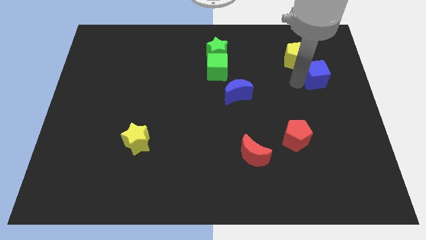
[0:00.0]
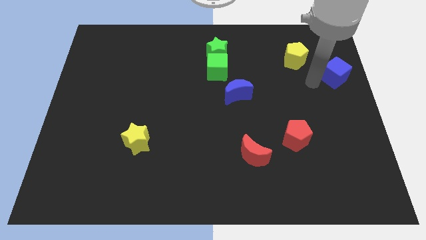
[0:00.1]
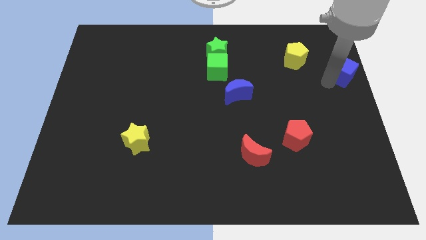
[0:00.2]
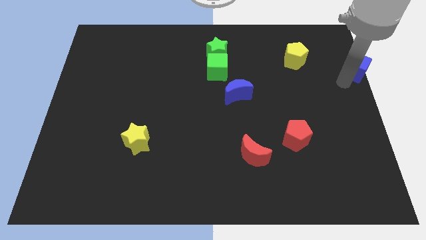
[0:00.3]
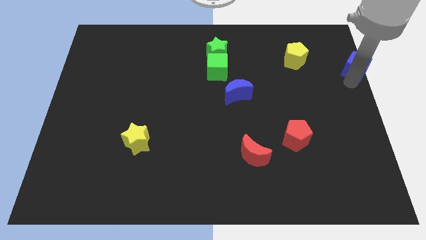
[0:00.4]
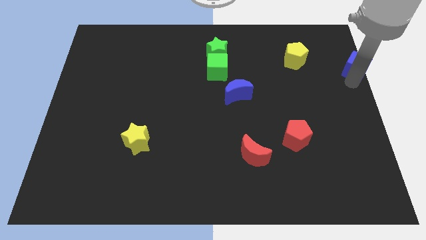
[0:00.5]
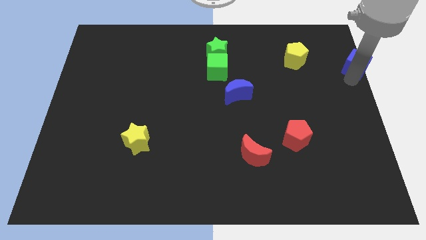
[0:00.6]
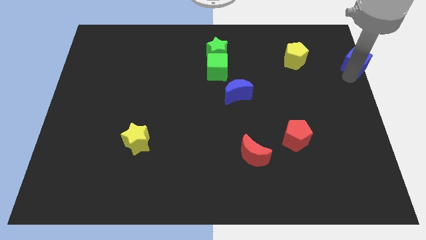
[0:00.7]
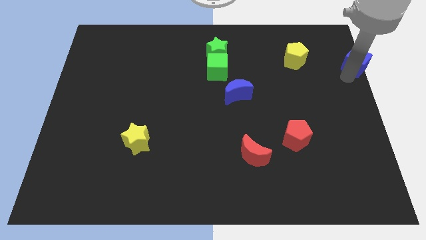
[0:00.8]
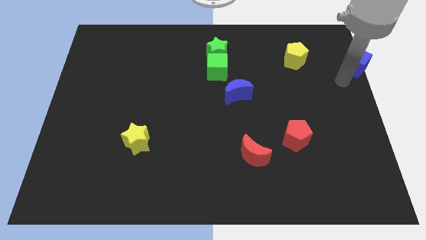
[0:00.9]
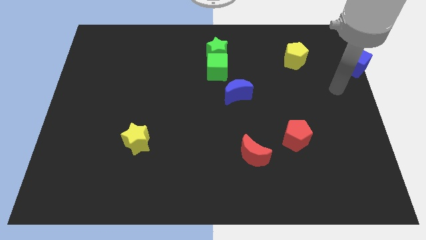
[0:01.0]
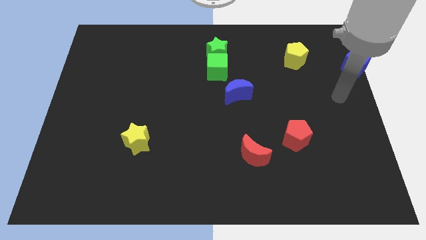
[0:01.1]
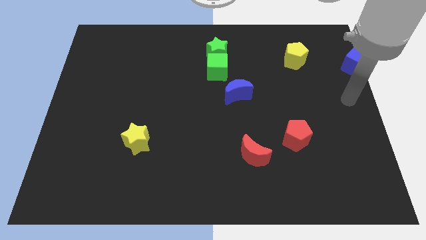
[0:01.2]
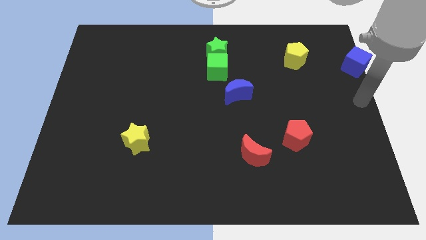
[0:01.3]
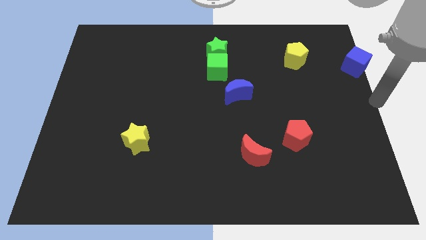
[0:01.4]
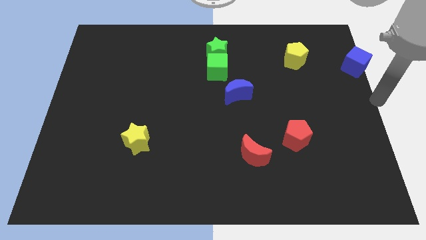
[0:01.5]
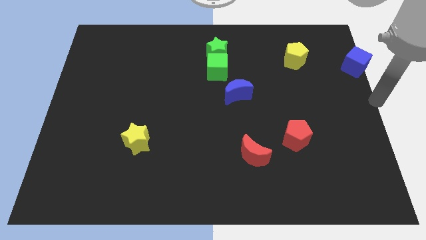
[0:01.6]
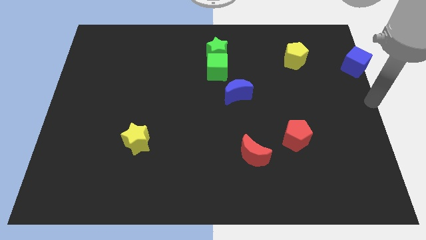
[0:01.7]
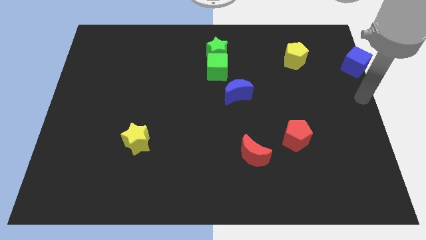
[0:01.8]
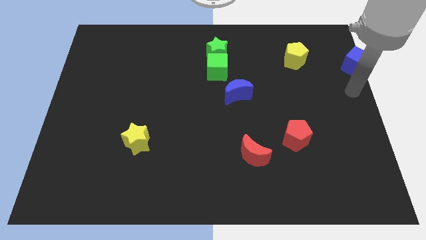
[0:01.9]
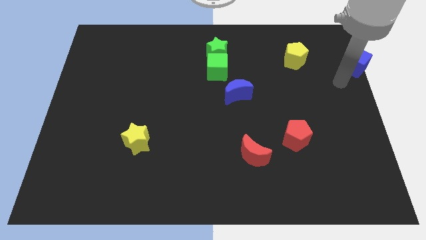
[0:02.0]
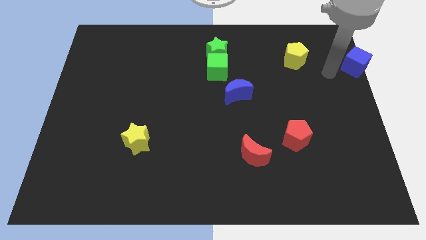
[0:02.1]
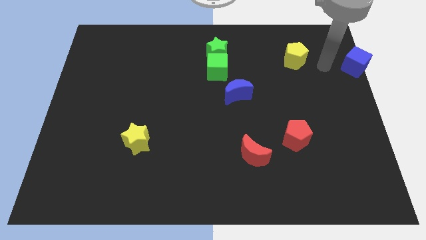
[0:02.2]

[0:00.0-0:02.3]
place the blue cube horizontal to yellow pentagon

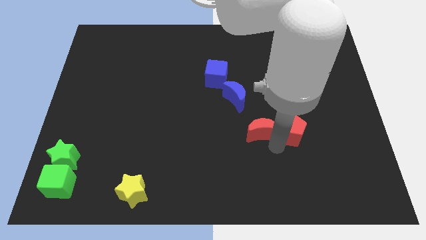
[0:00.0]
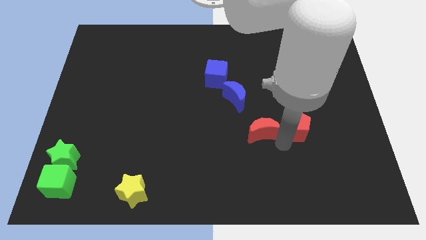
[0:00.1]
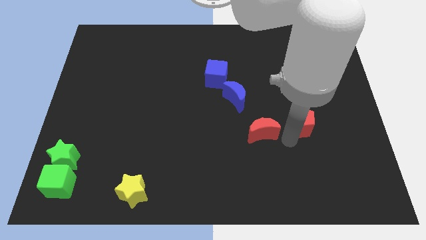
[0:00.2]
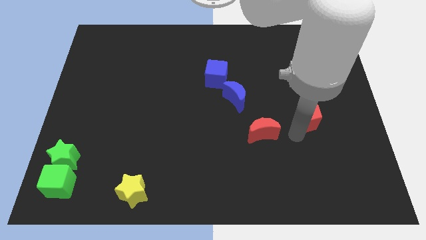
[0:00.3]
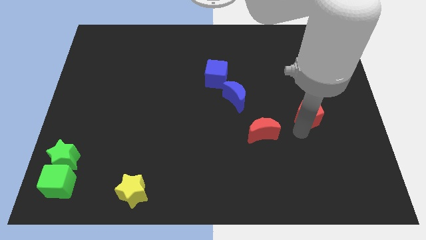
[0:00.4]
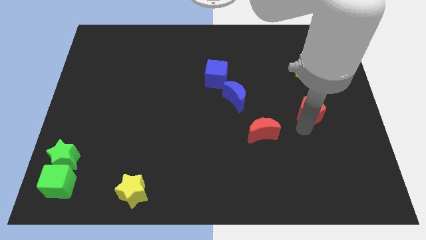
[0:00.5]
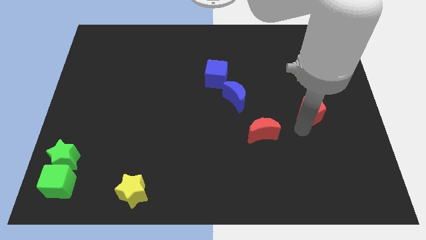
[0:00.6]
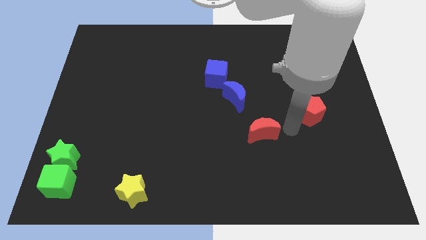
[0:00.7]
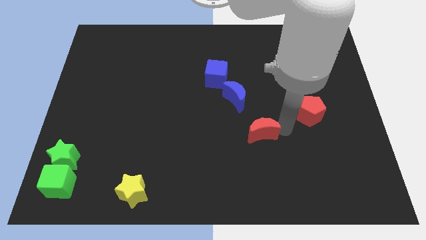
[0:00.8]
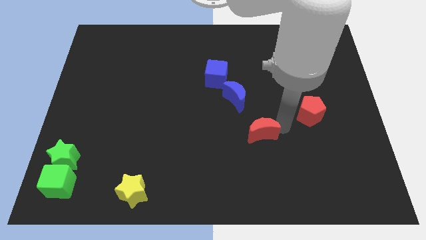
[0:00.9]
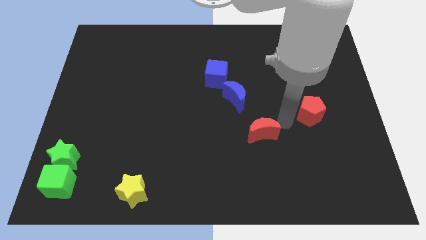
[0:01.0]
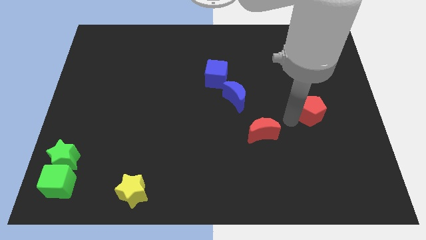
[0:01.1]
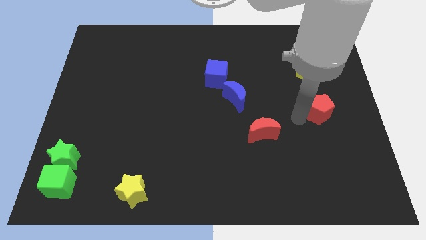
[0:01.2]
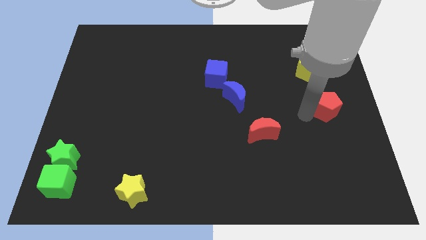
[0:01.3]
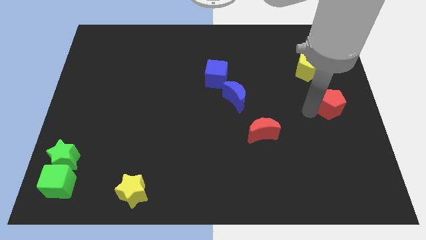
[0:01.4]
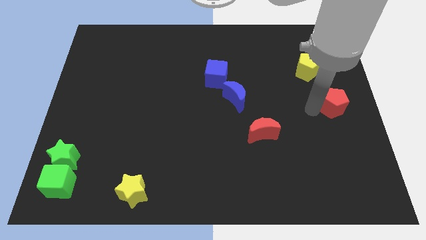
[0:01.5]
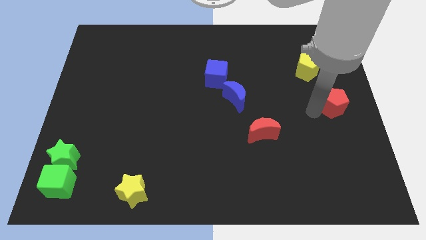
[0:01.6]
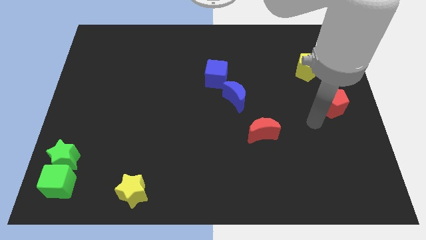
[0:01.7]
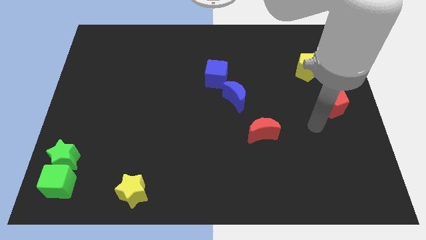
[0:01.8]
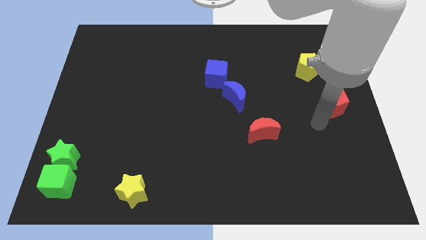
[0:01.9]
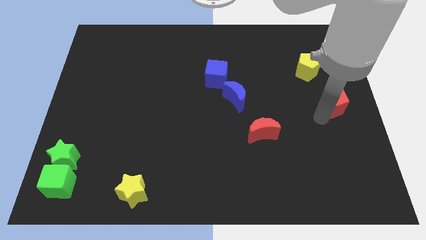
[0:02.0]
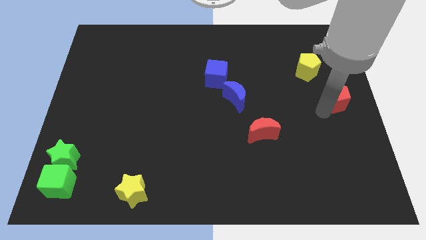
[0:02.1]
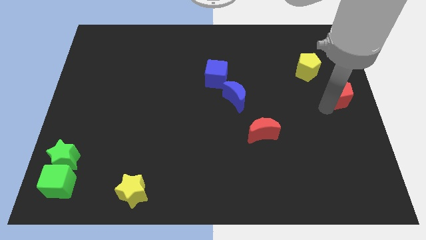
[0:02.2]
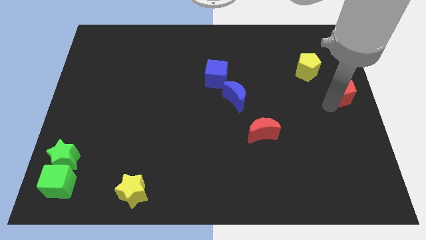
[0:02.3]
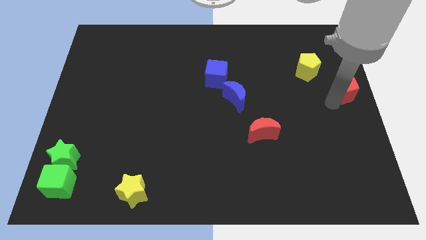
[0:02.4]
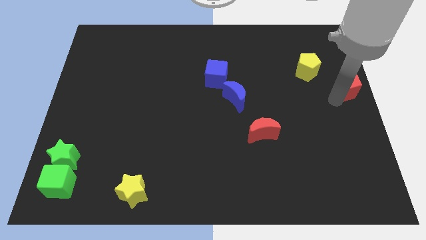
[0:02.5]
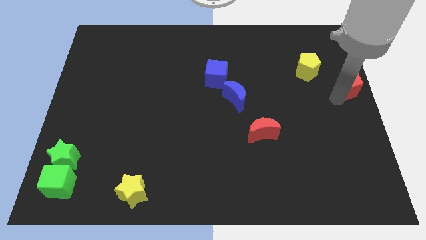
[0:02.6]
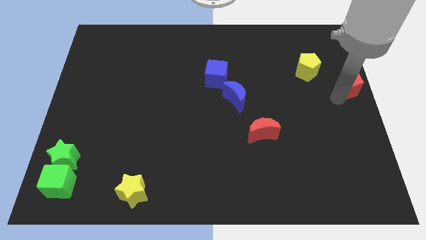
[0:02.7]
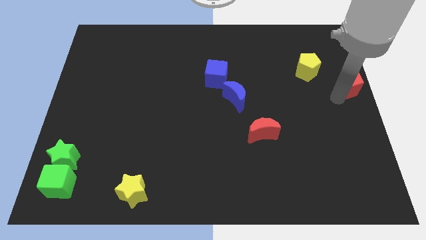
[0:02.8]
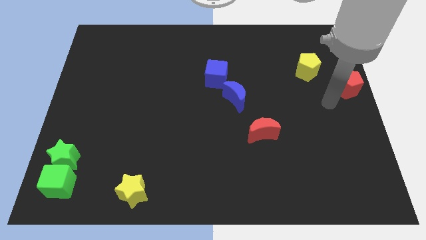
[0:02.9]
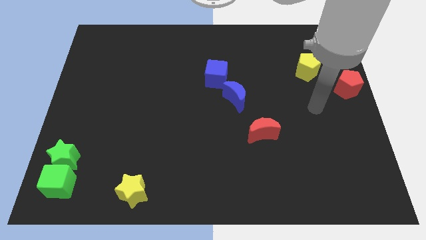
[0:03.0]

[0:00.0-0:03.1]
move the red pentagon parallel to the blue crescent

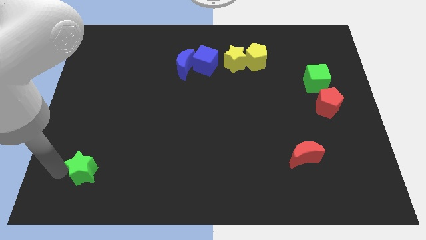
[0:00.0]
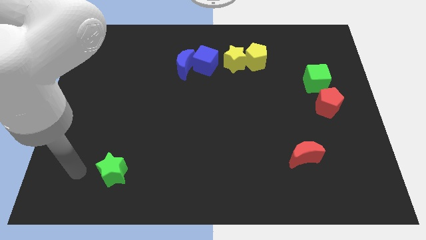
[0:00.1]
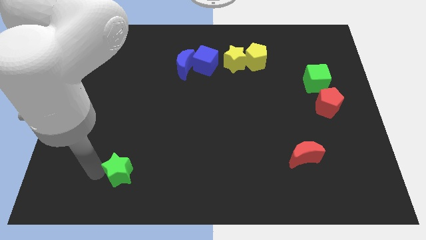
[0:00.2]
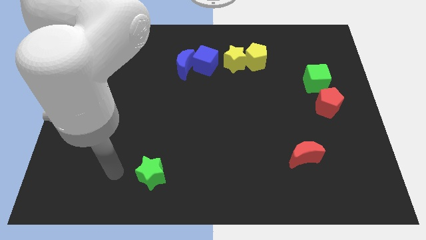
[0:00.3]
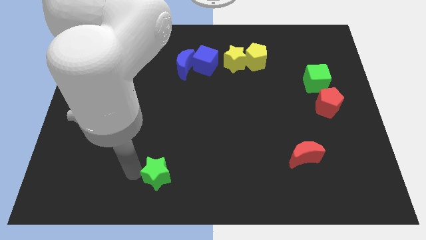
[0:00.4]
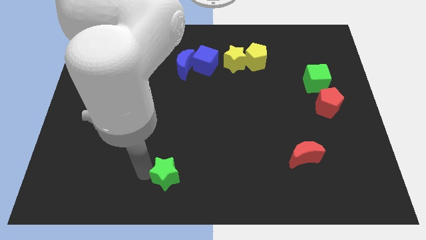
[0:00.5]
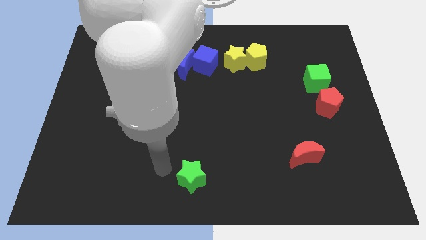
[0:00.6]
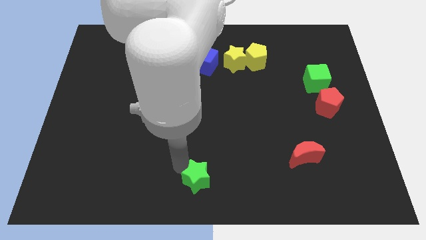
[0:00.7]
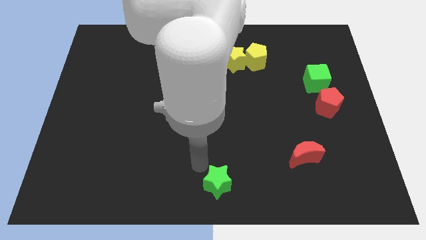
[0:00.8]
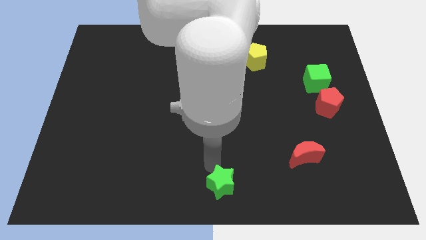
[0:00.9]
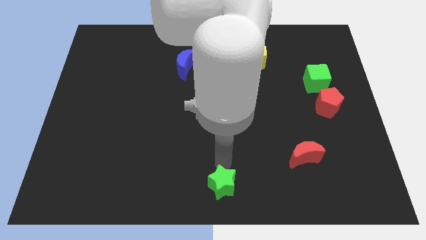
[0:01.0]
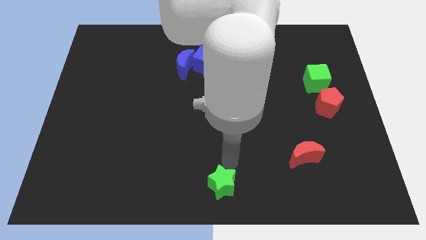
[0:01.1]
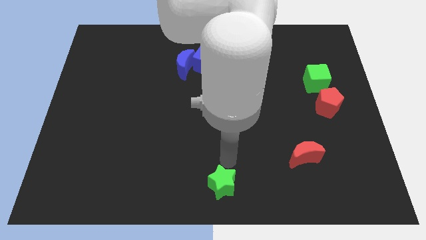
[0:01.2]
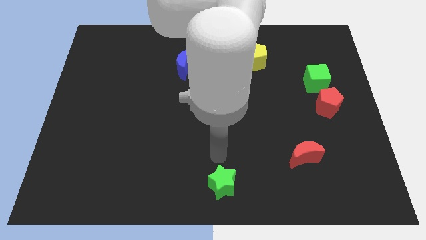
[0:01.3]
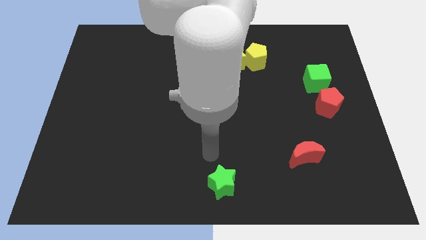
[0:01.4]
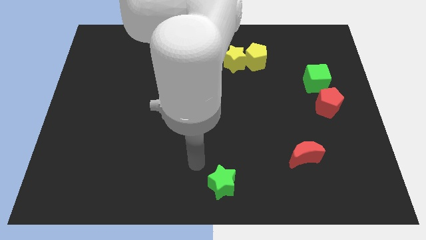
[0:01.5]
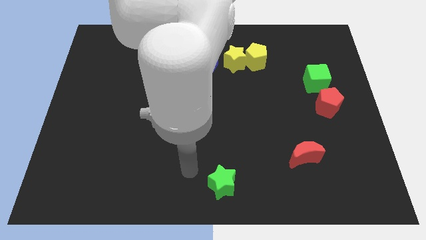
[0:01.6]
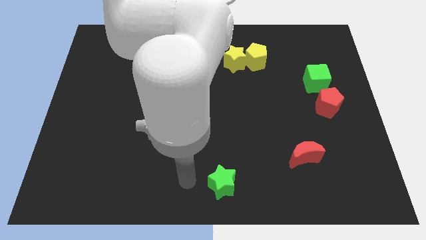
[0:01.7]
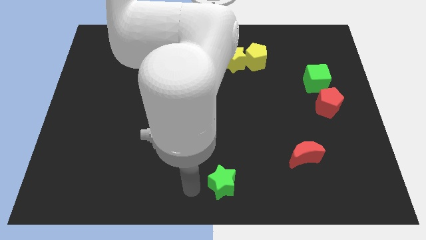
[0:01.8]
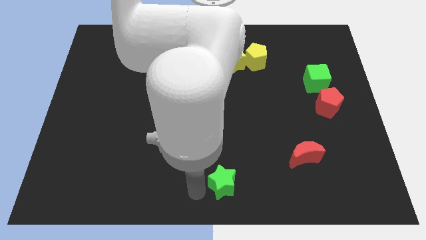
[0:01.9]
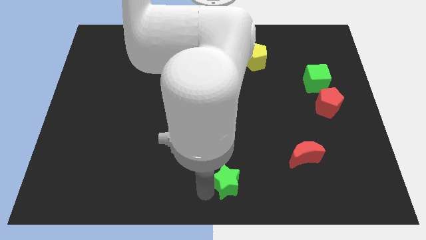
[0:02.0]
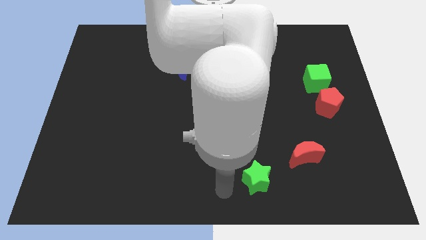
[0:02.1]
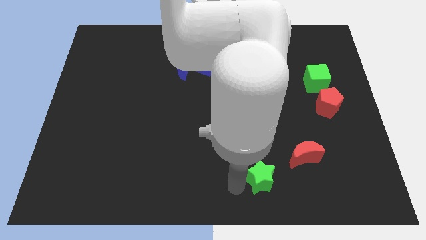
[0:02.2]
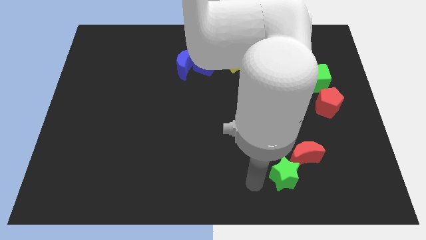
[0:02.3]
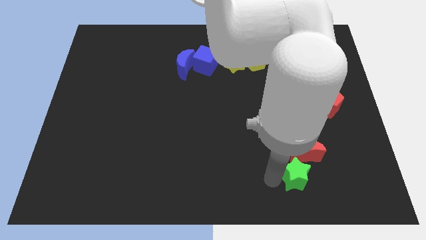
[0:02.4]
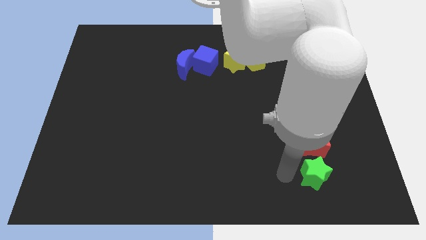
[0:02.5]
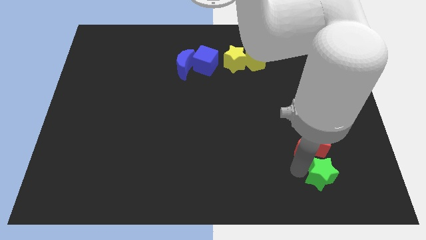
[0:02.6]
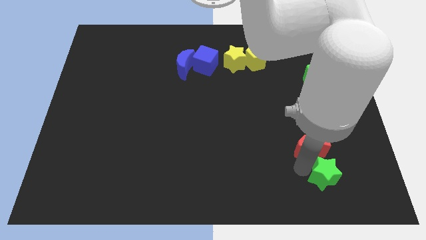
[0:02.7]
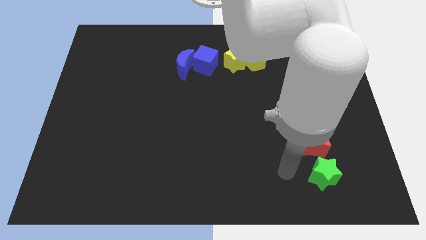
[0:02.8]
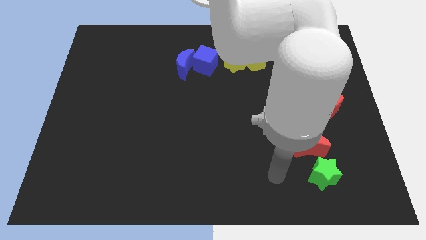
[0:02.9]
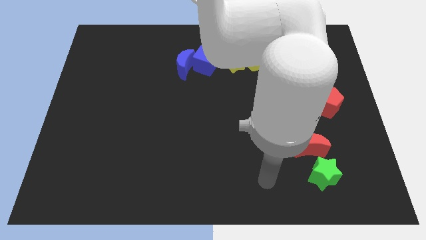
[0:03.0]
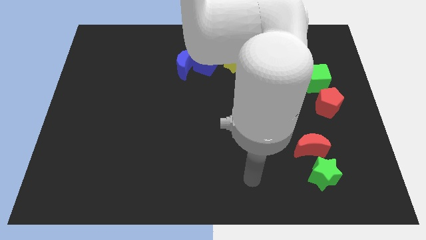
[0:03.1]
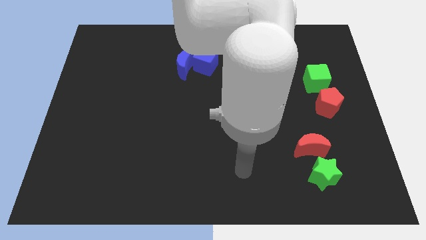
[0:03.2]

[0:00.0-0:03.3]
move the green star below the red moon

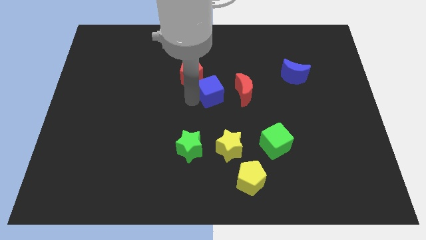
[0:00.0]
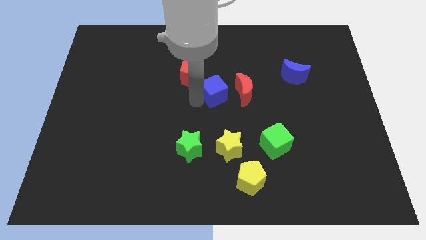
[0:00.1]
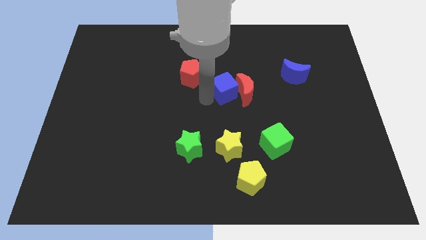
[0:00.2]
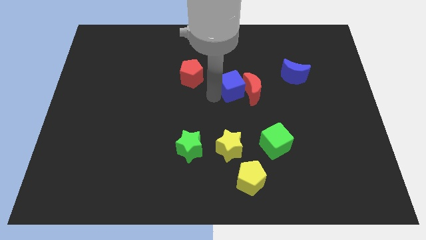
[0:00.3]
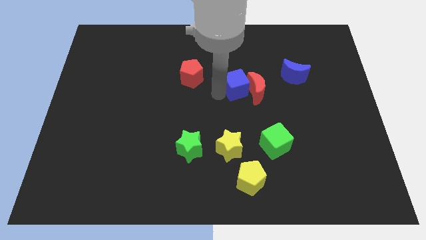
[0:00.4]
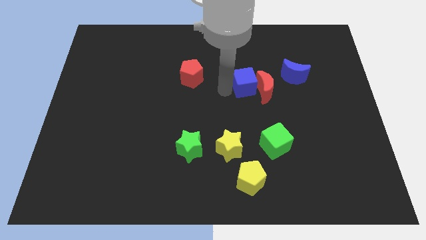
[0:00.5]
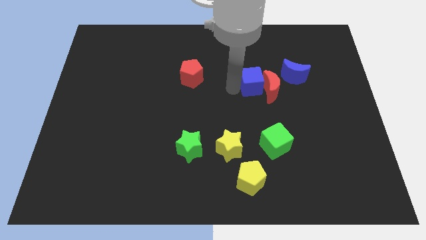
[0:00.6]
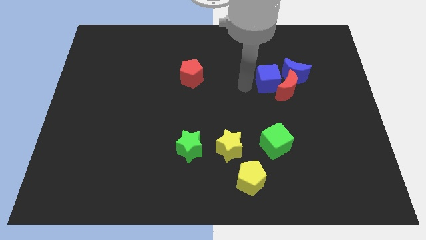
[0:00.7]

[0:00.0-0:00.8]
push blue cube in to red moon
